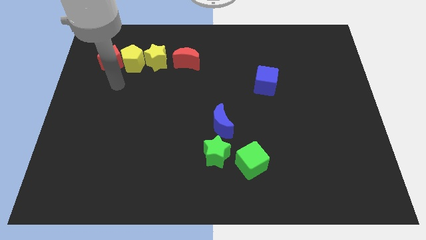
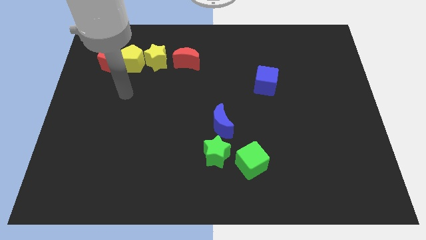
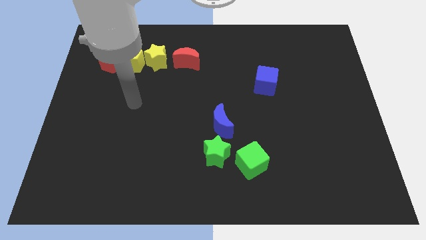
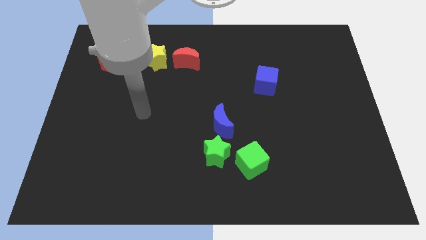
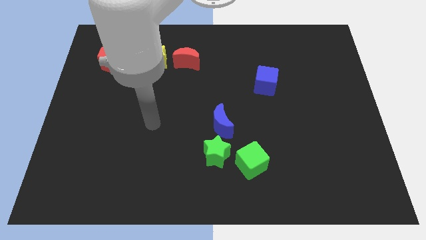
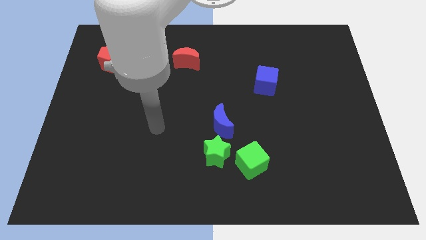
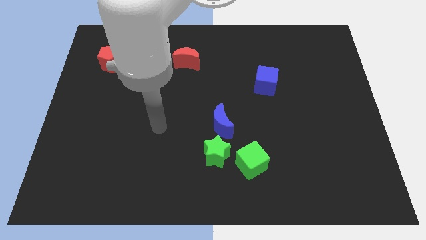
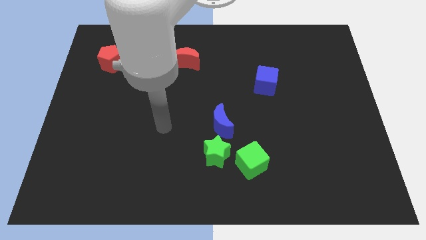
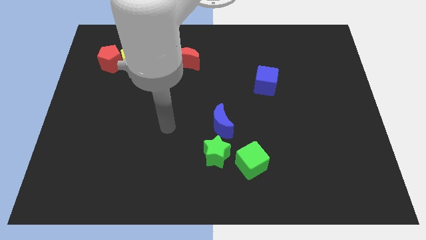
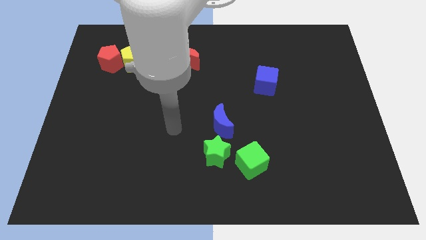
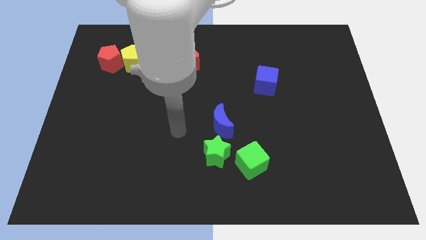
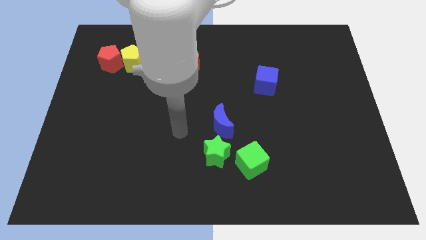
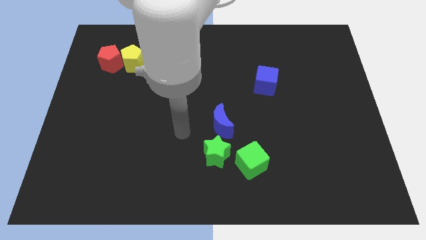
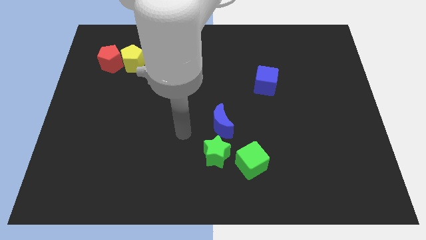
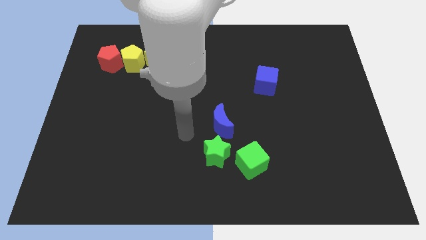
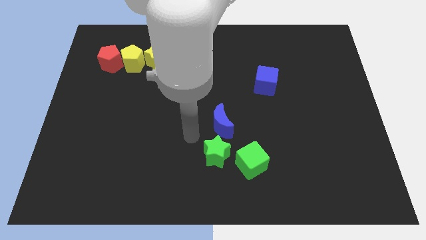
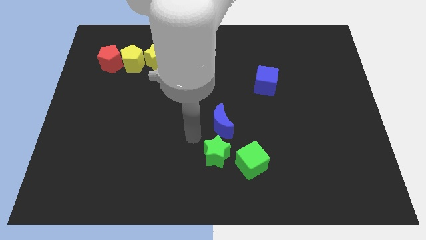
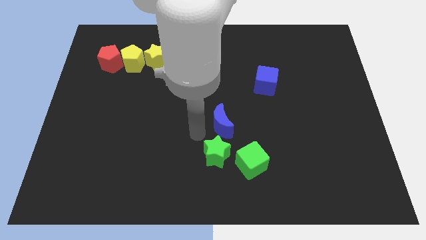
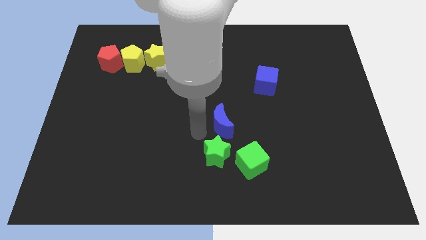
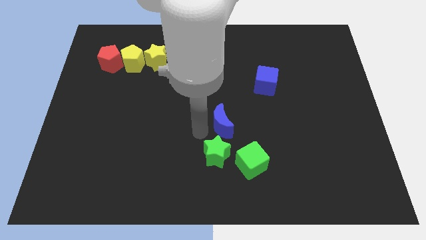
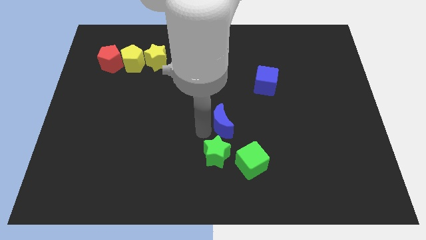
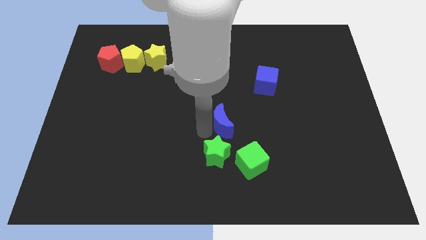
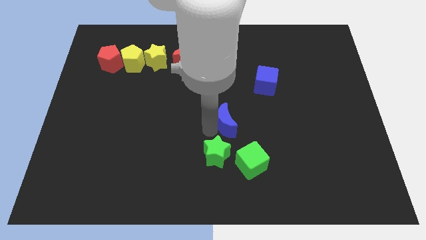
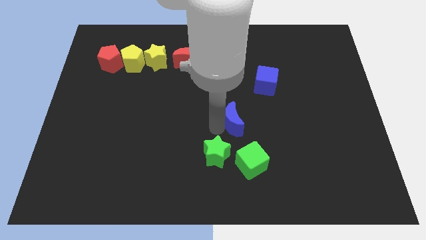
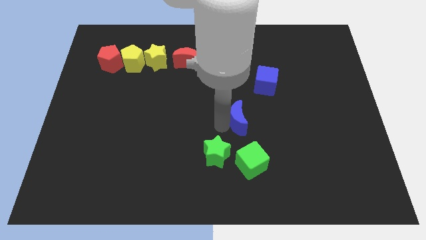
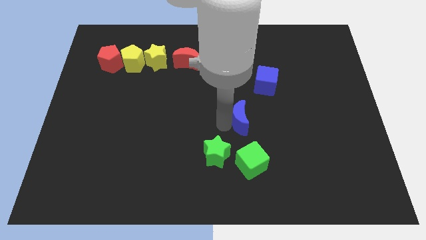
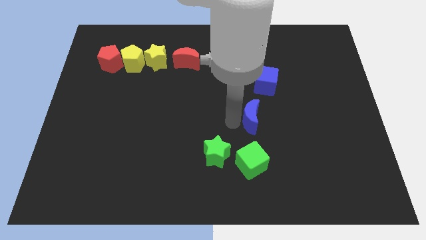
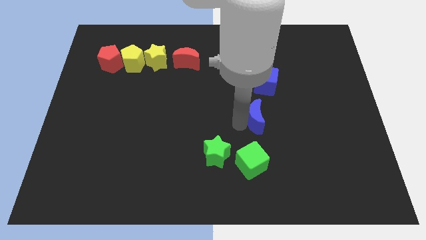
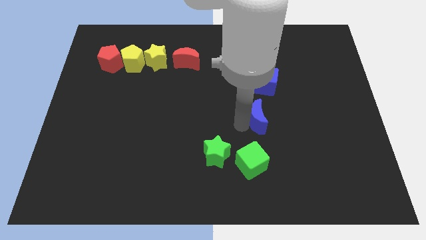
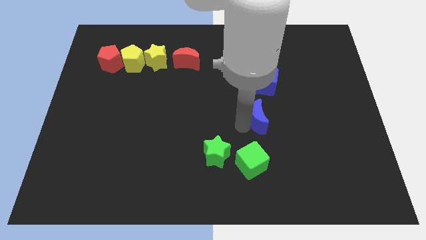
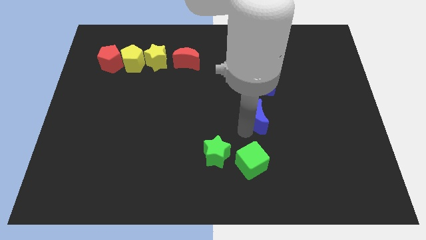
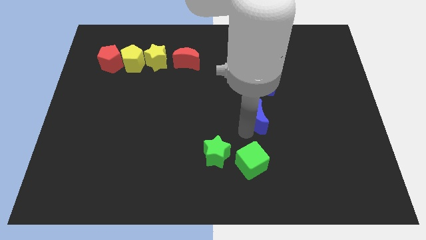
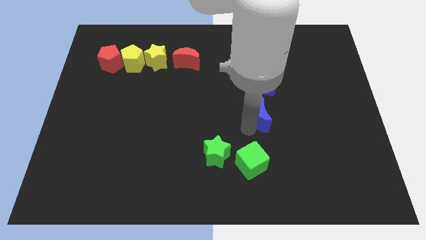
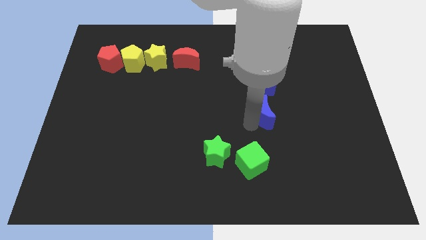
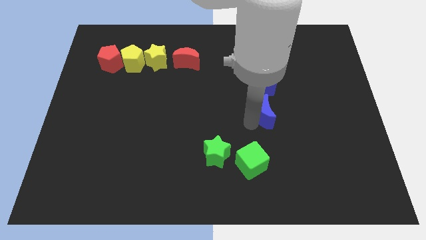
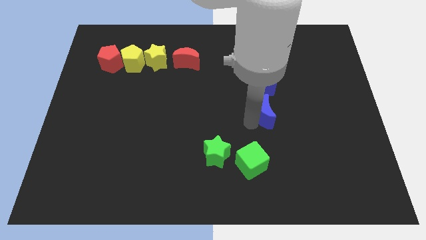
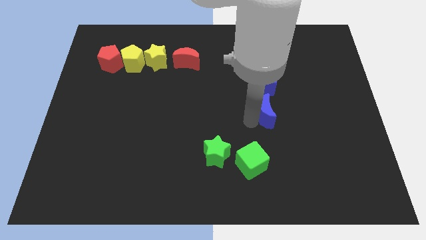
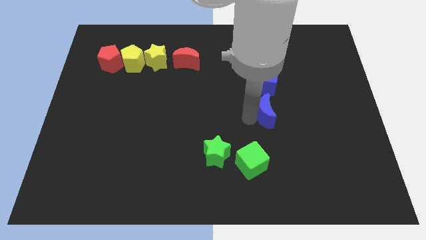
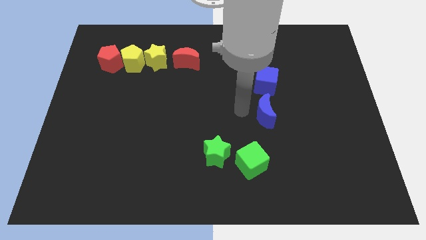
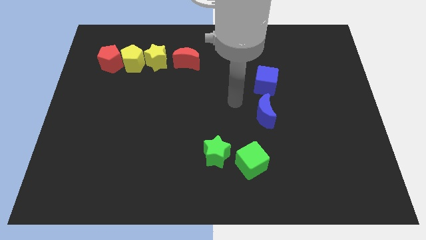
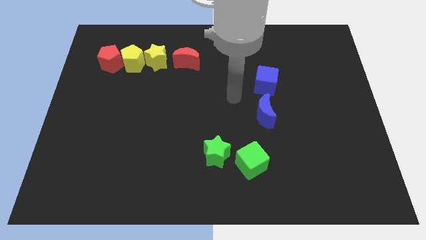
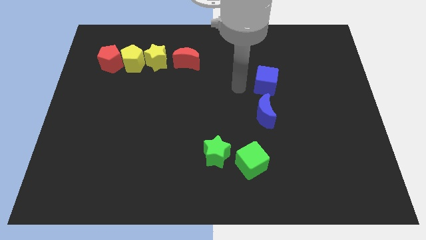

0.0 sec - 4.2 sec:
move blue moon below the blue cube

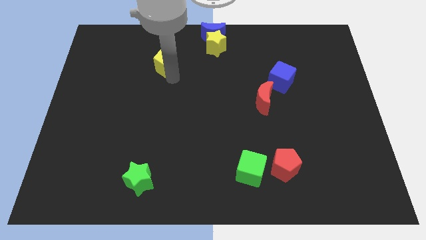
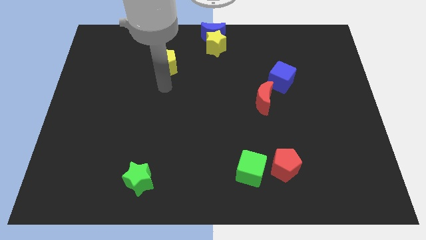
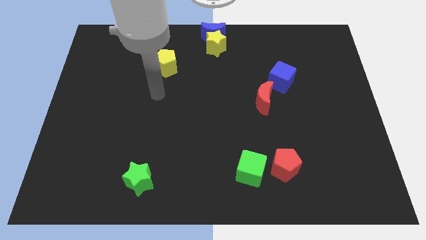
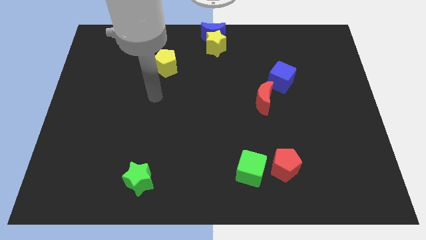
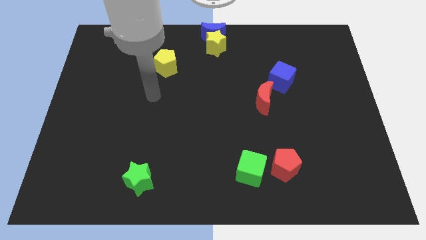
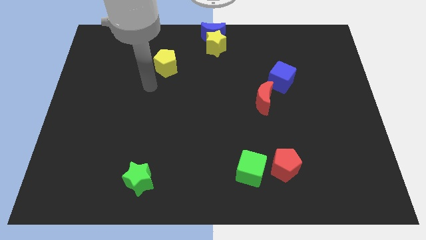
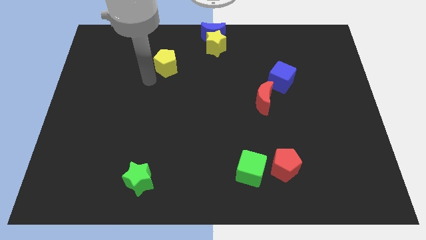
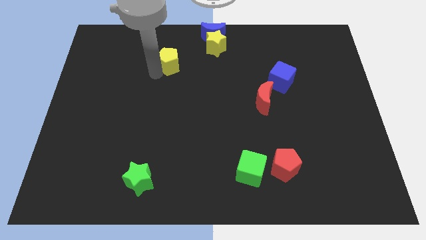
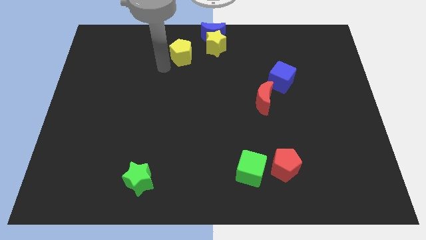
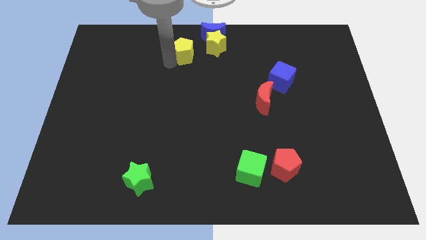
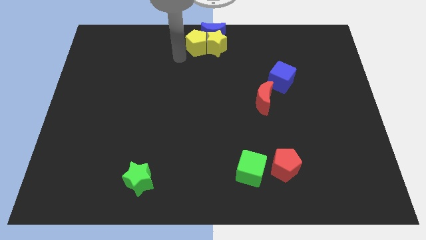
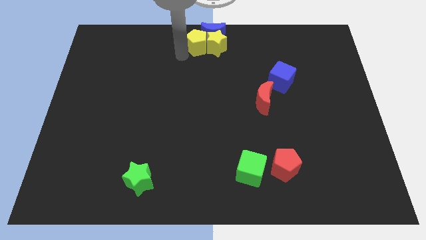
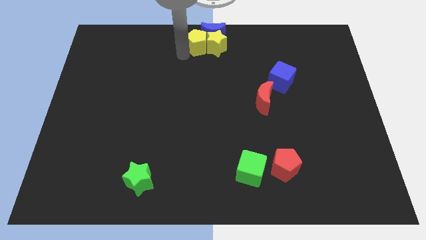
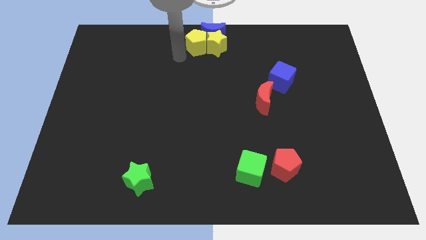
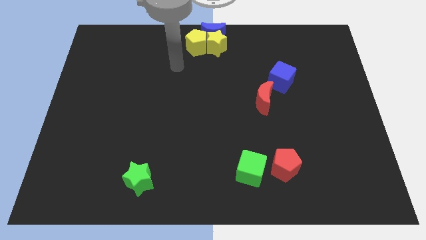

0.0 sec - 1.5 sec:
place yellow pentagon to the left side of the yellow star

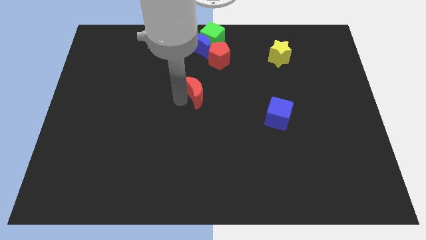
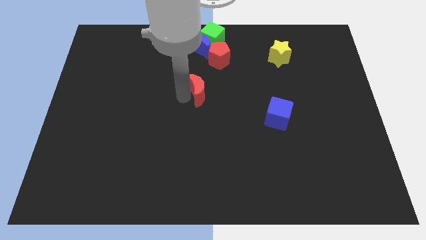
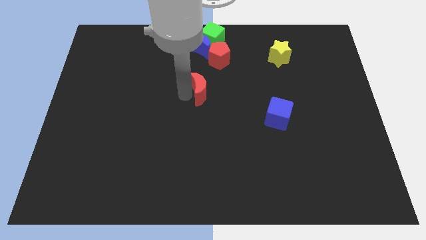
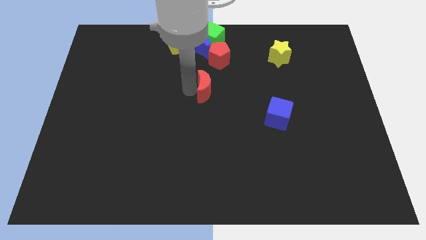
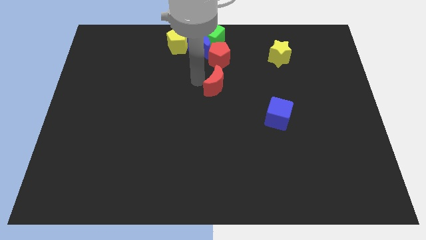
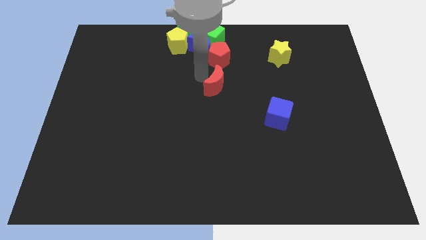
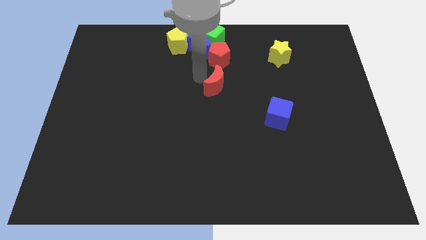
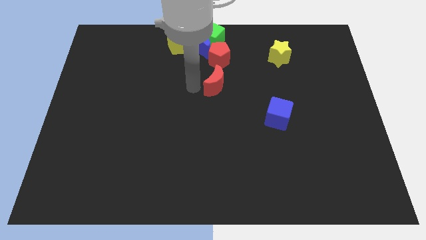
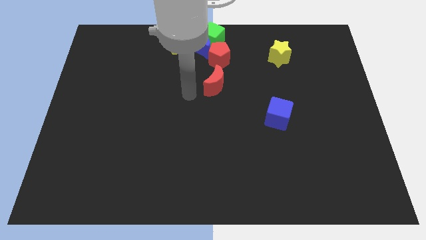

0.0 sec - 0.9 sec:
place red moon to the bottom red pentagon

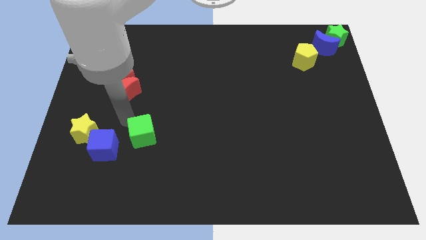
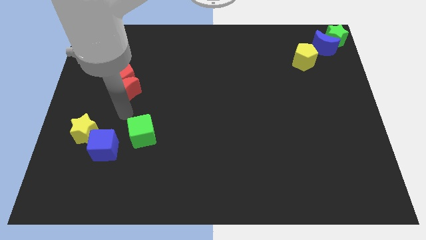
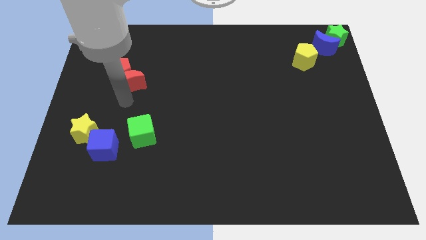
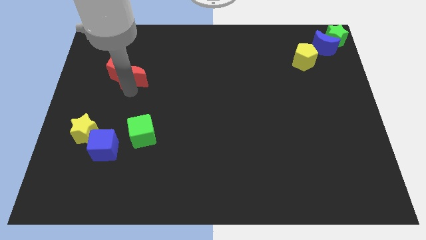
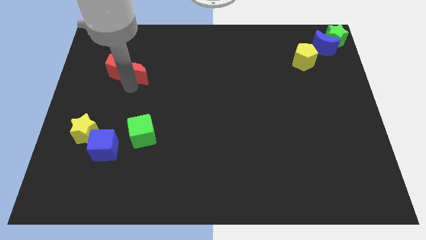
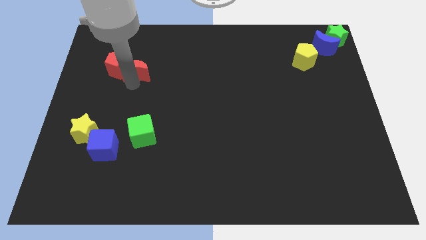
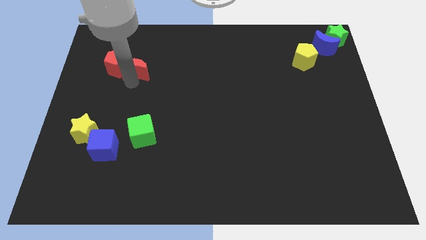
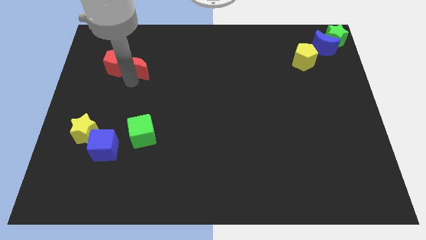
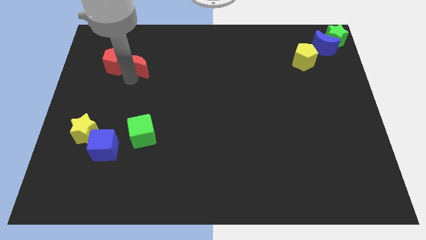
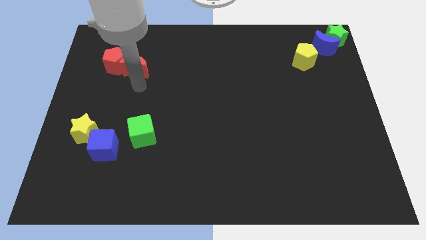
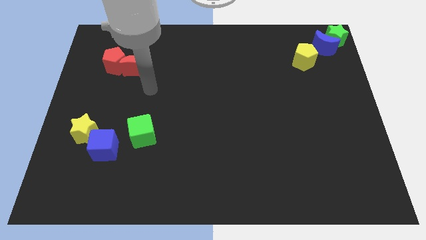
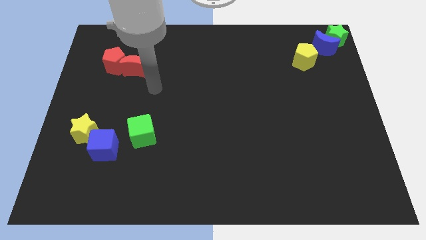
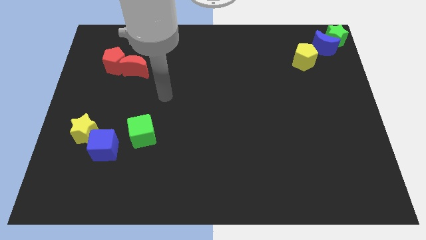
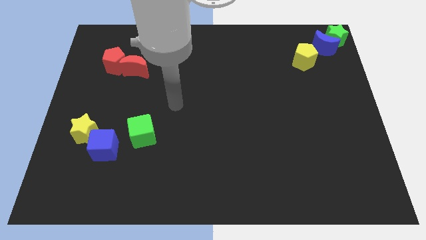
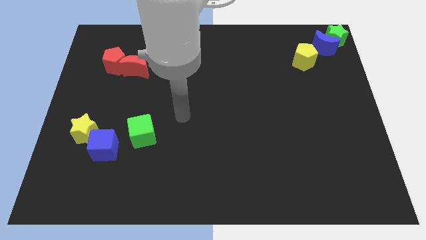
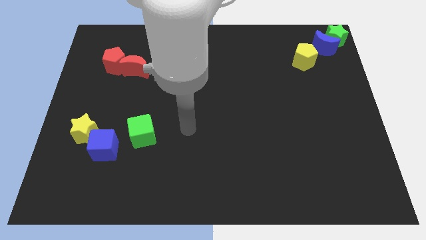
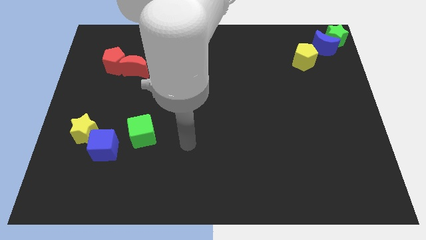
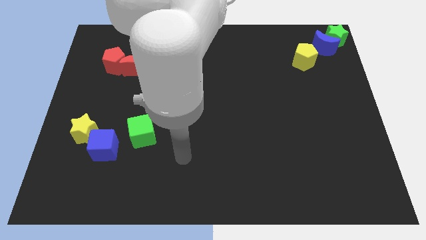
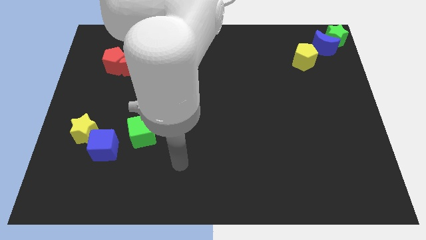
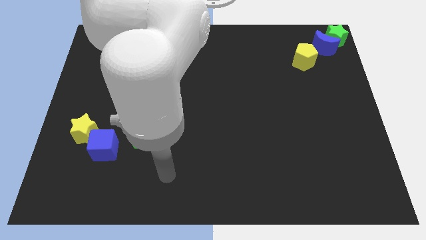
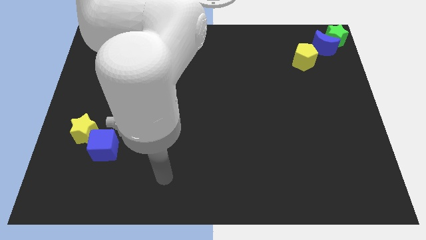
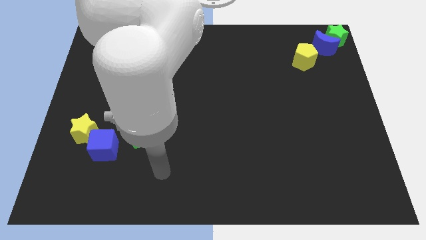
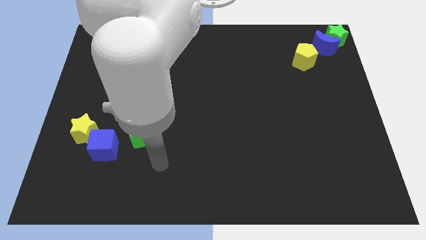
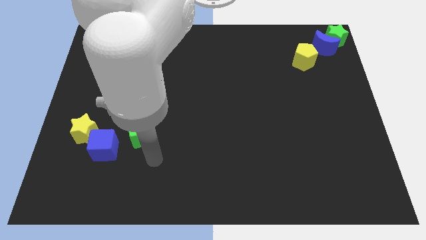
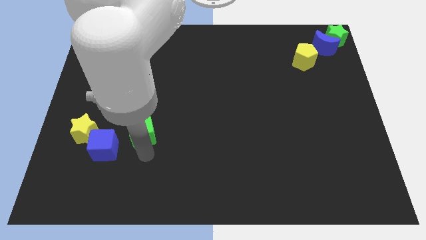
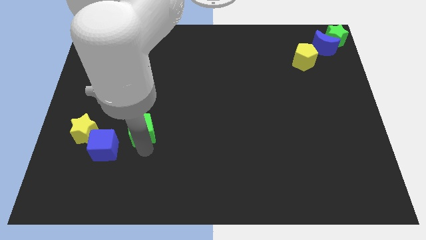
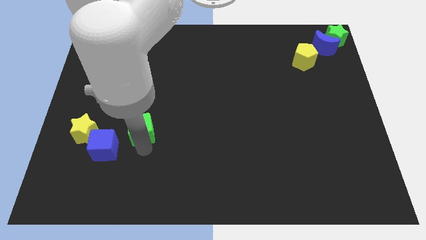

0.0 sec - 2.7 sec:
move the group of red blocks to the top
